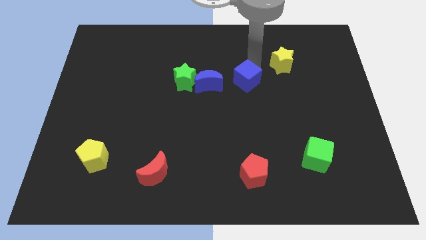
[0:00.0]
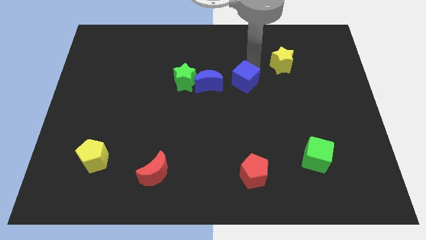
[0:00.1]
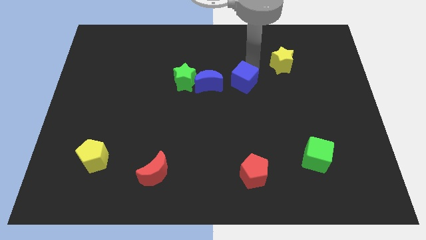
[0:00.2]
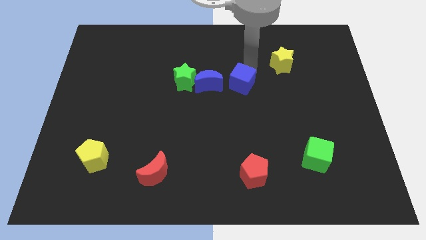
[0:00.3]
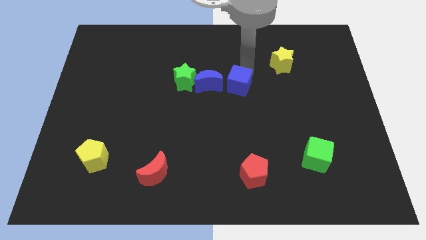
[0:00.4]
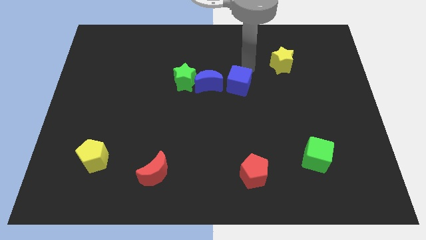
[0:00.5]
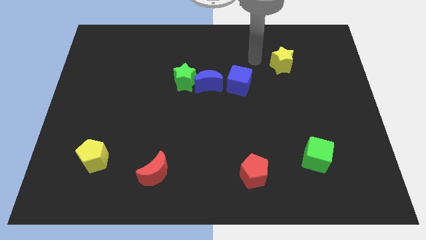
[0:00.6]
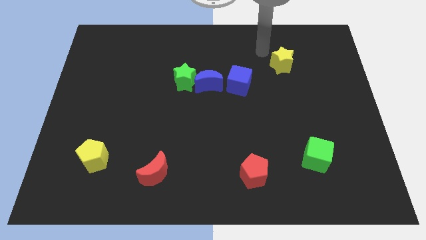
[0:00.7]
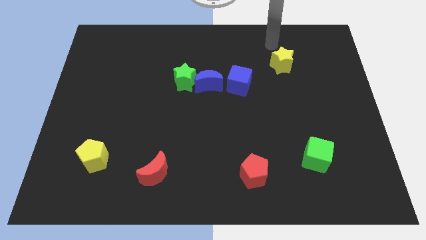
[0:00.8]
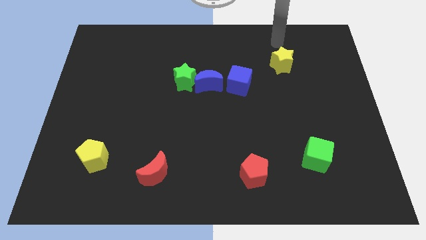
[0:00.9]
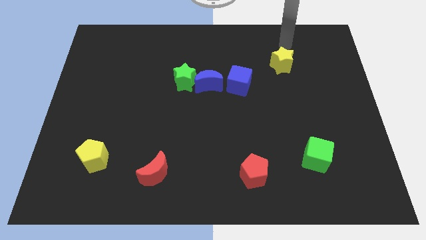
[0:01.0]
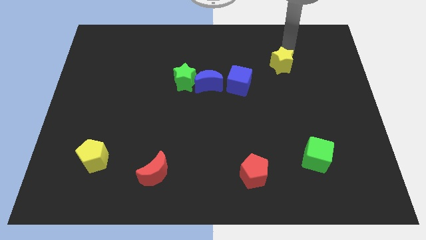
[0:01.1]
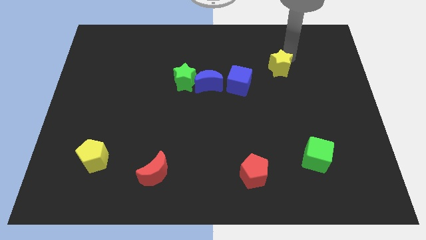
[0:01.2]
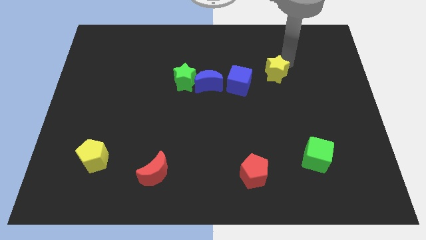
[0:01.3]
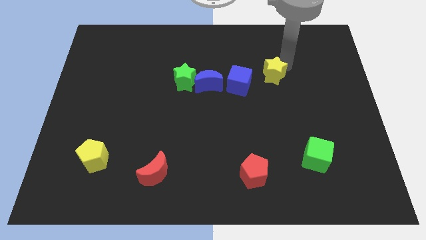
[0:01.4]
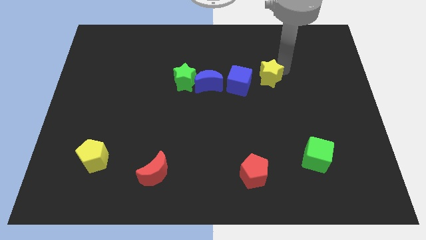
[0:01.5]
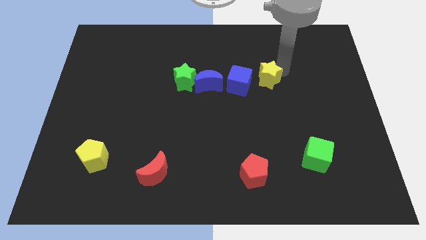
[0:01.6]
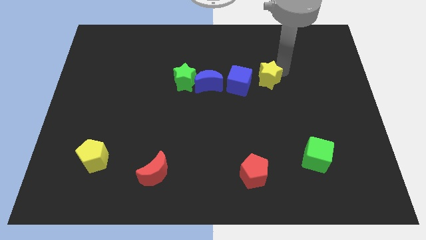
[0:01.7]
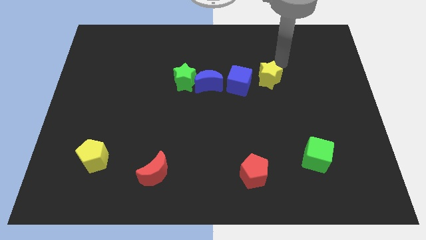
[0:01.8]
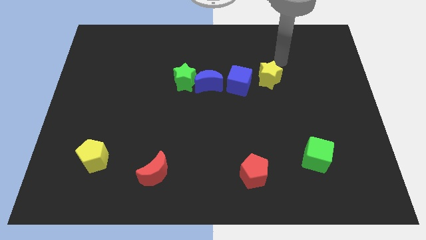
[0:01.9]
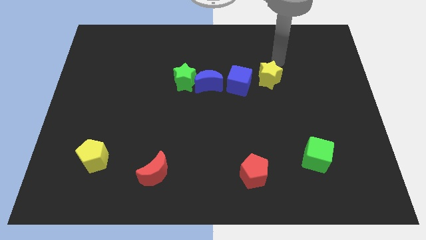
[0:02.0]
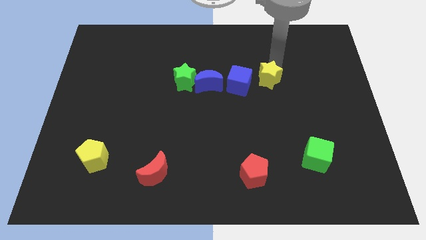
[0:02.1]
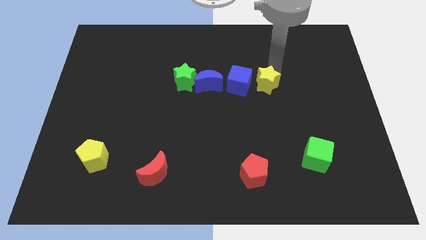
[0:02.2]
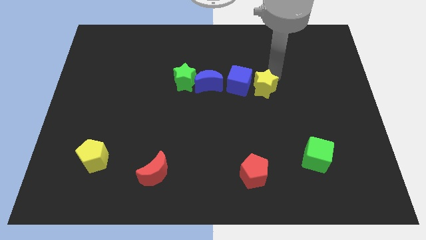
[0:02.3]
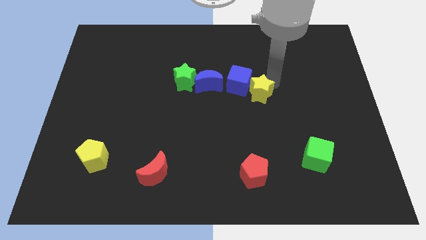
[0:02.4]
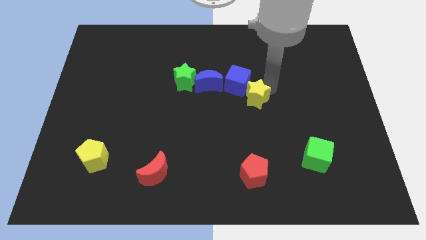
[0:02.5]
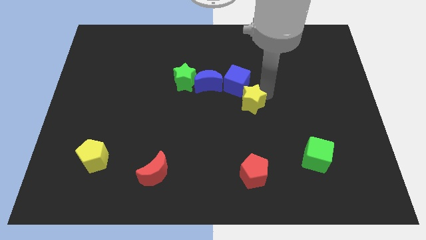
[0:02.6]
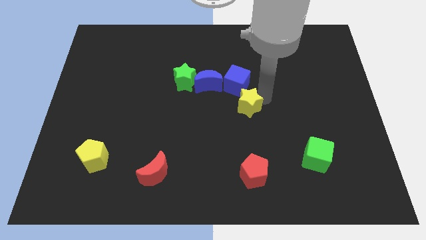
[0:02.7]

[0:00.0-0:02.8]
move yellow star above red pentagon

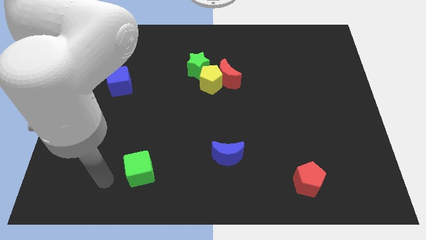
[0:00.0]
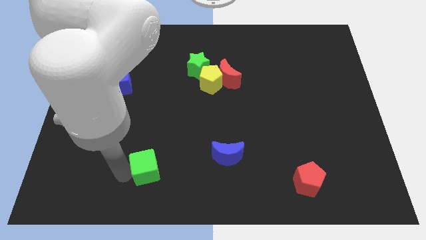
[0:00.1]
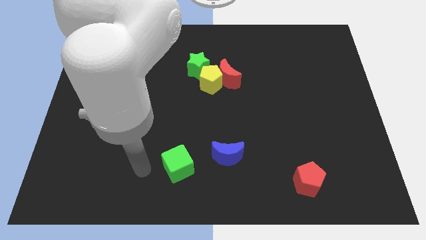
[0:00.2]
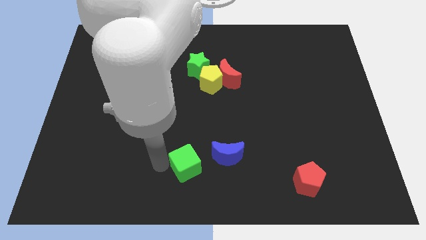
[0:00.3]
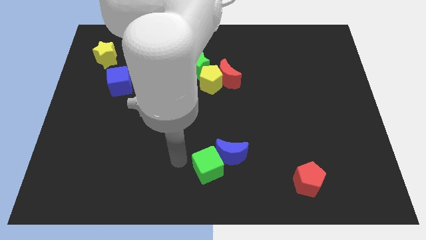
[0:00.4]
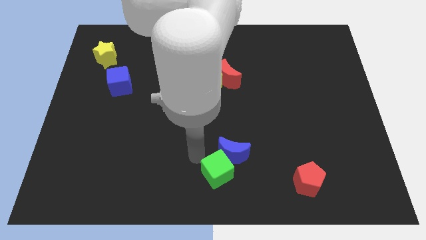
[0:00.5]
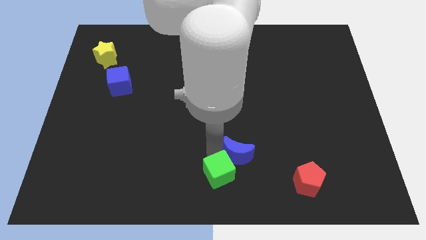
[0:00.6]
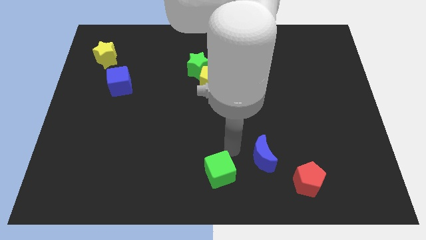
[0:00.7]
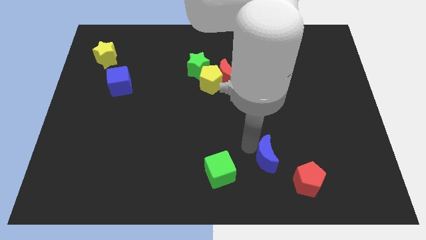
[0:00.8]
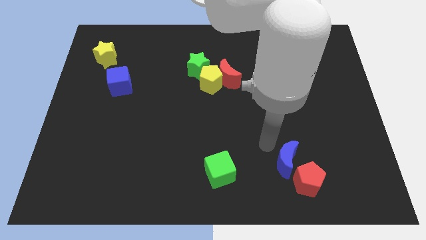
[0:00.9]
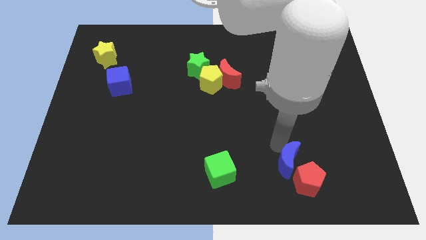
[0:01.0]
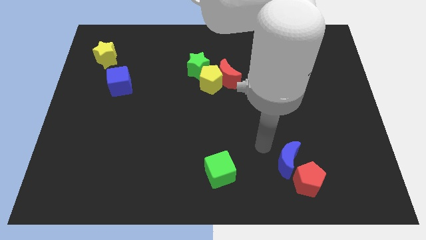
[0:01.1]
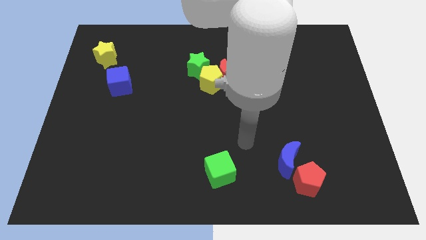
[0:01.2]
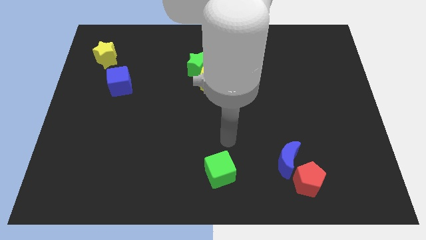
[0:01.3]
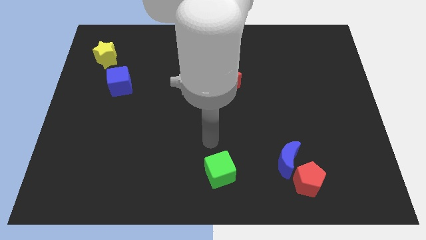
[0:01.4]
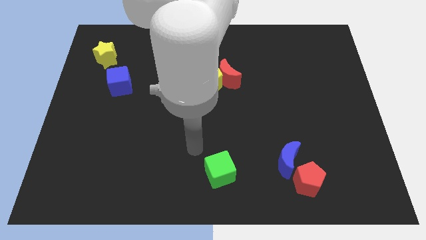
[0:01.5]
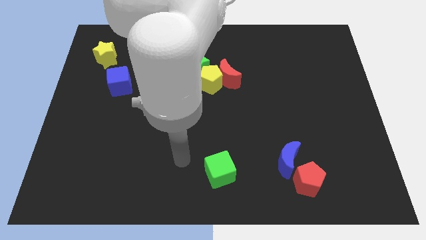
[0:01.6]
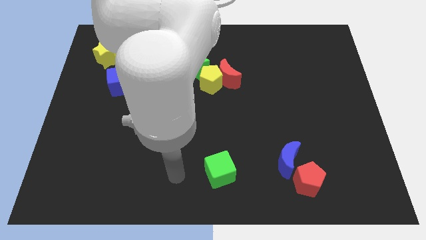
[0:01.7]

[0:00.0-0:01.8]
push the blue crescent with green cube slightly to the right

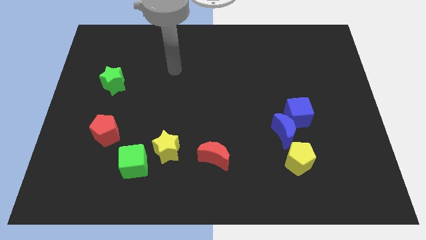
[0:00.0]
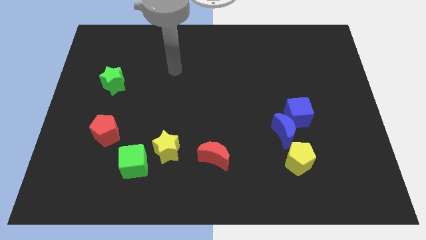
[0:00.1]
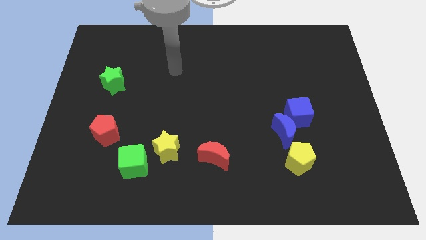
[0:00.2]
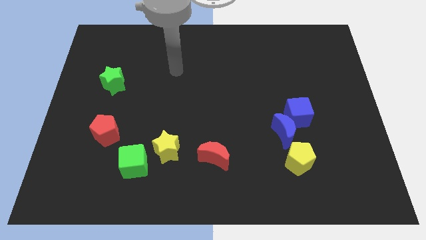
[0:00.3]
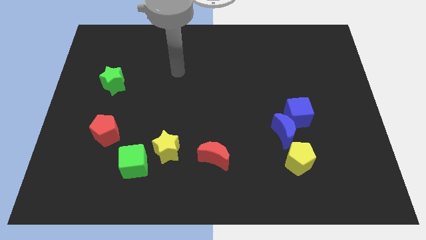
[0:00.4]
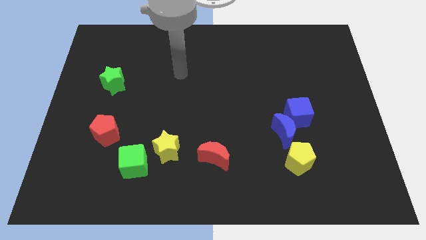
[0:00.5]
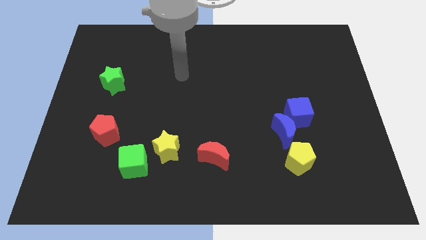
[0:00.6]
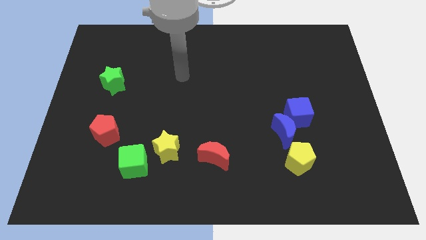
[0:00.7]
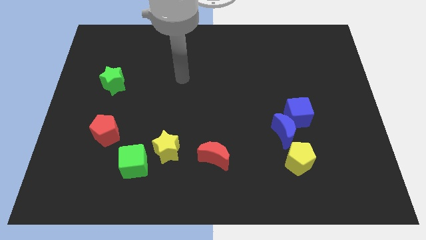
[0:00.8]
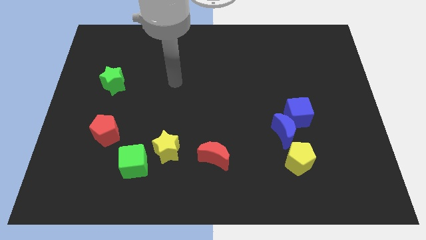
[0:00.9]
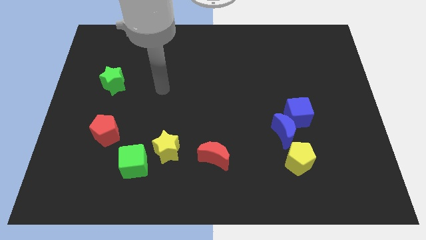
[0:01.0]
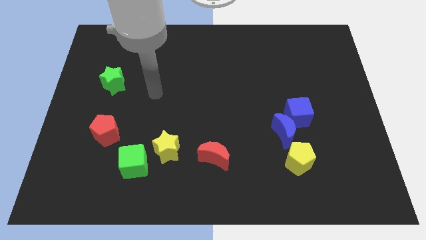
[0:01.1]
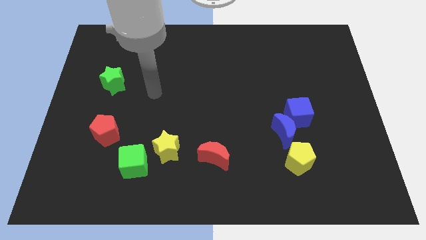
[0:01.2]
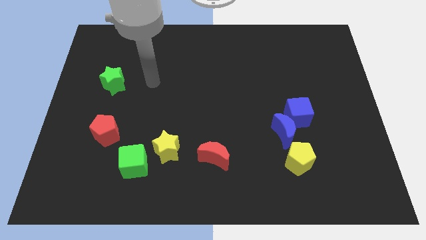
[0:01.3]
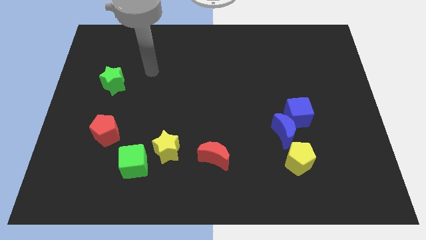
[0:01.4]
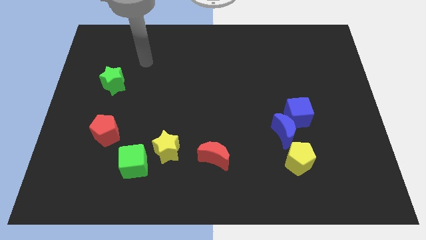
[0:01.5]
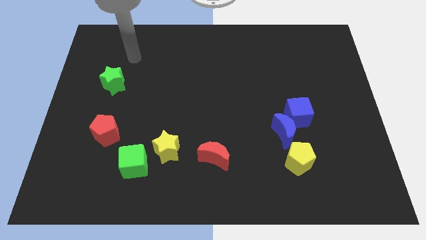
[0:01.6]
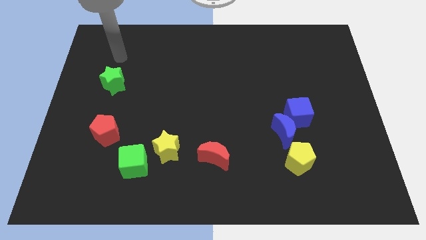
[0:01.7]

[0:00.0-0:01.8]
move your arm towards top of the green star

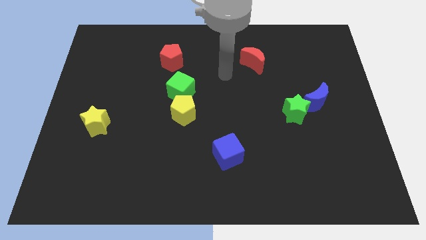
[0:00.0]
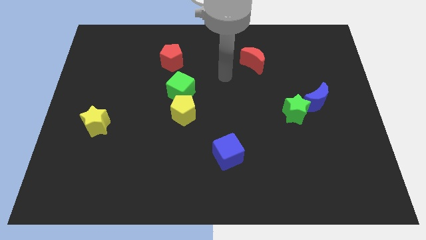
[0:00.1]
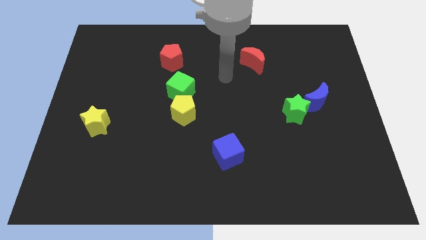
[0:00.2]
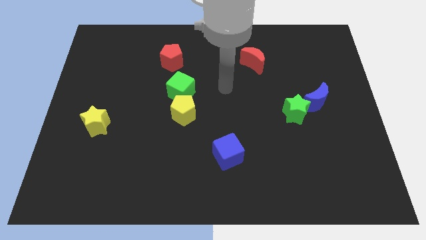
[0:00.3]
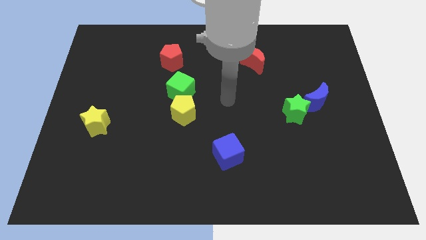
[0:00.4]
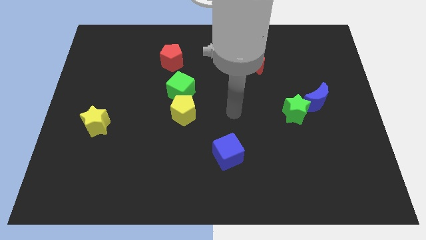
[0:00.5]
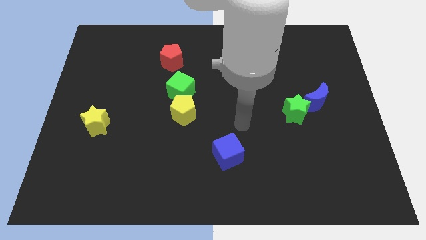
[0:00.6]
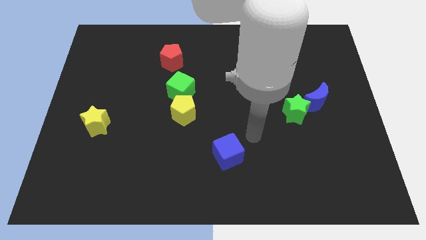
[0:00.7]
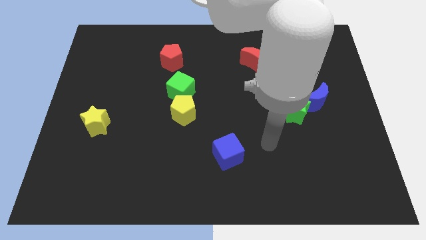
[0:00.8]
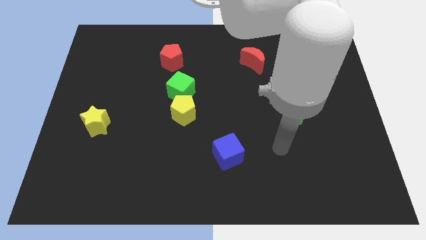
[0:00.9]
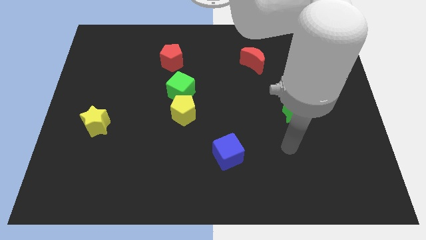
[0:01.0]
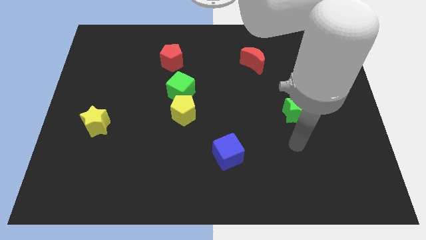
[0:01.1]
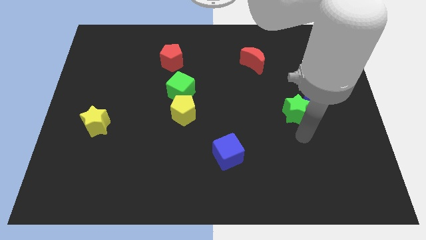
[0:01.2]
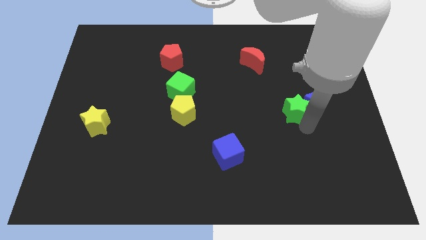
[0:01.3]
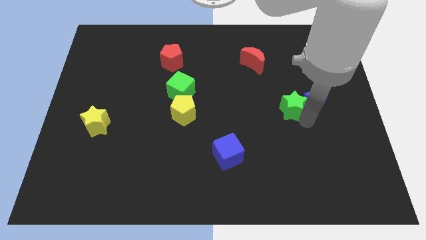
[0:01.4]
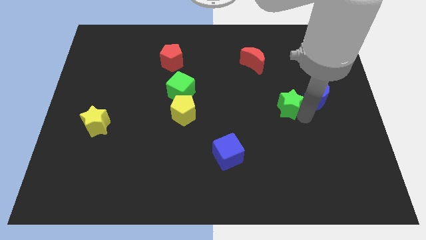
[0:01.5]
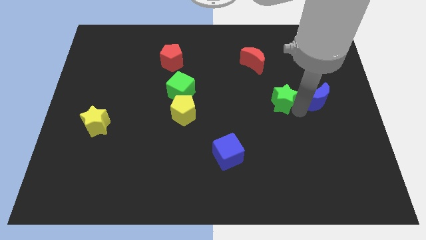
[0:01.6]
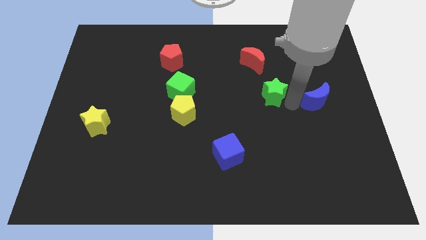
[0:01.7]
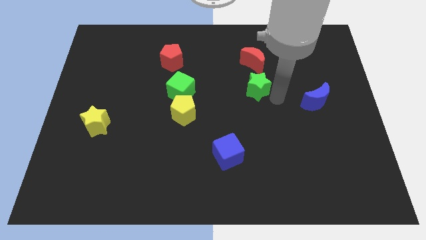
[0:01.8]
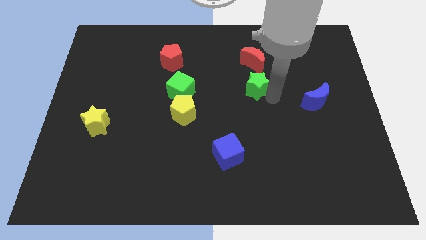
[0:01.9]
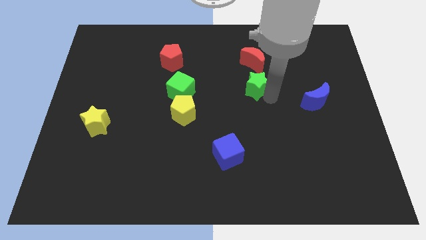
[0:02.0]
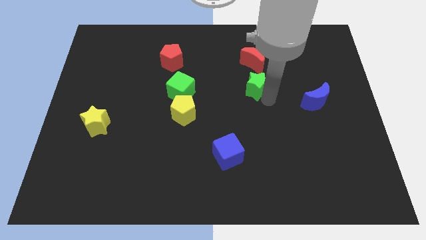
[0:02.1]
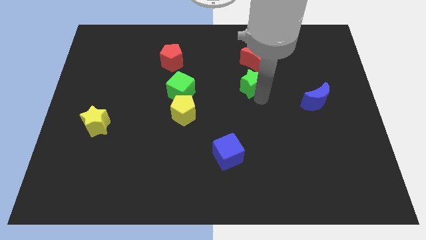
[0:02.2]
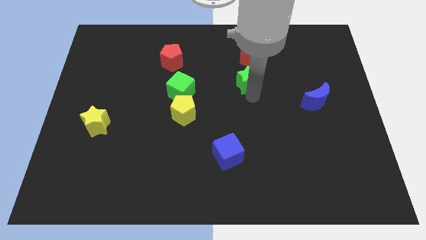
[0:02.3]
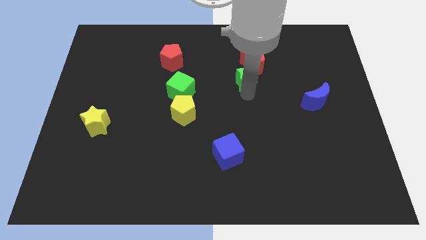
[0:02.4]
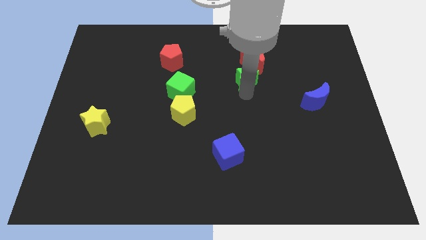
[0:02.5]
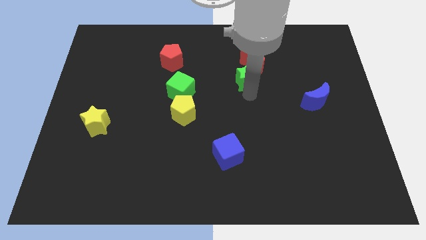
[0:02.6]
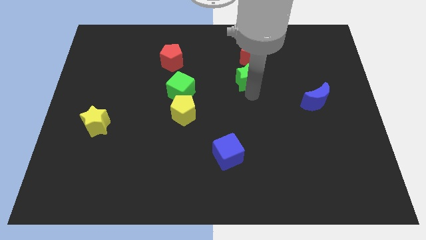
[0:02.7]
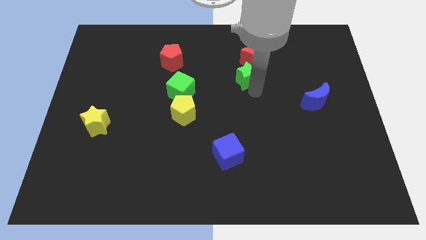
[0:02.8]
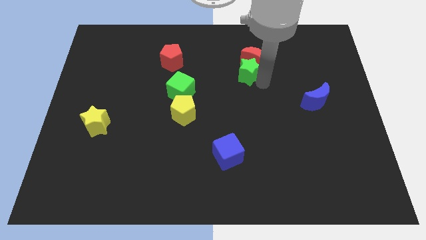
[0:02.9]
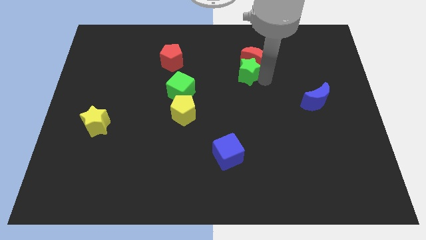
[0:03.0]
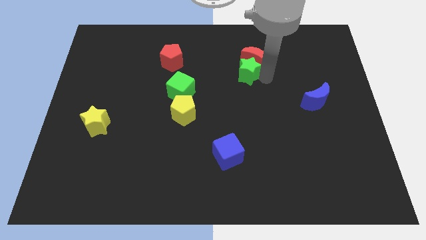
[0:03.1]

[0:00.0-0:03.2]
move the green star below the red crescent
